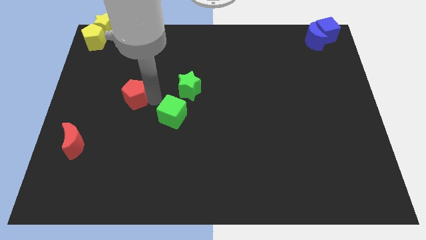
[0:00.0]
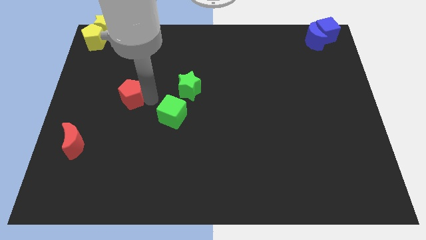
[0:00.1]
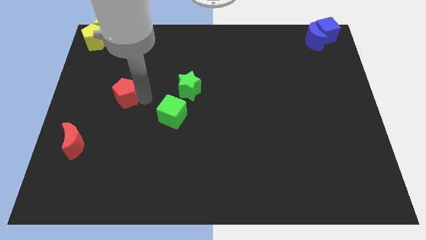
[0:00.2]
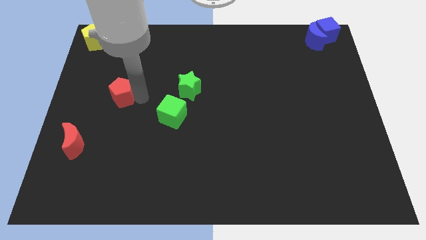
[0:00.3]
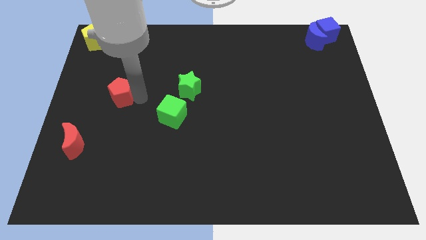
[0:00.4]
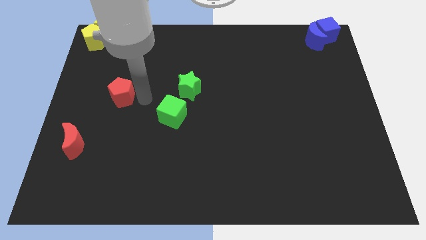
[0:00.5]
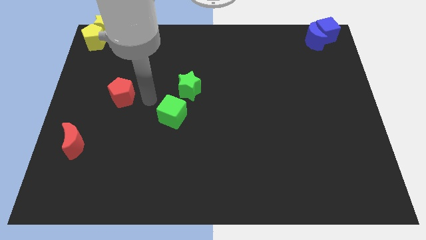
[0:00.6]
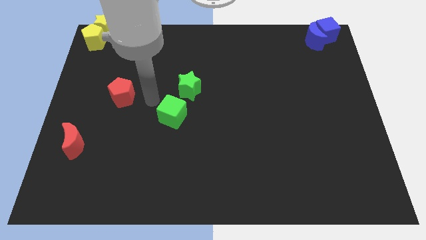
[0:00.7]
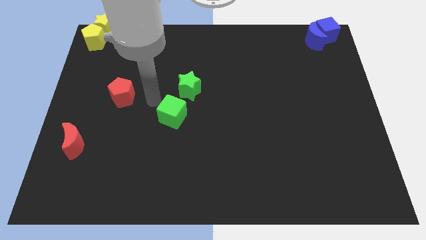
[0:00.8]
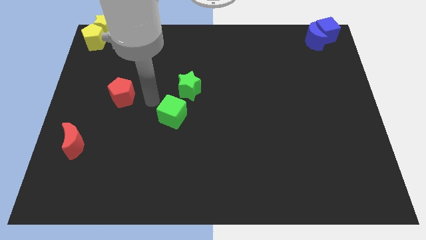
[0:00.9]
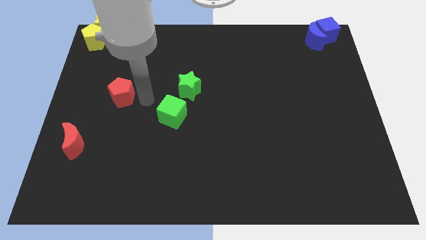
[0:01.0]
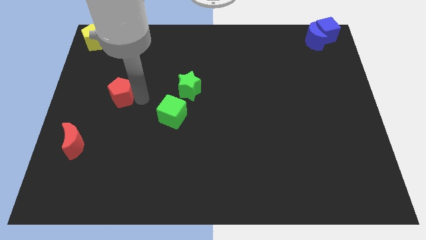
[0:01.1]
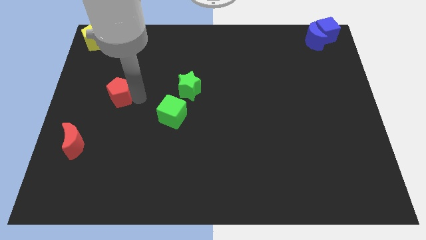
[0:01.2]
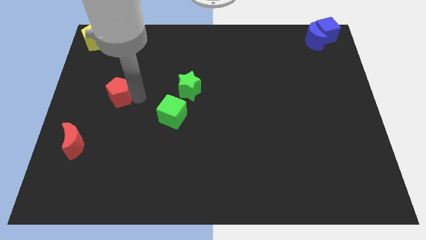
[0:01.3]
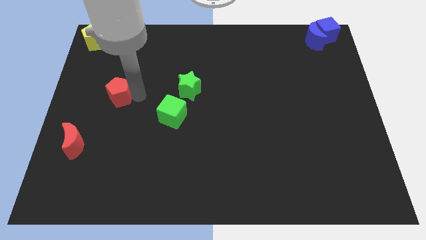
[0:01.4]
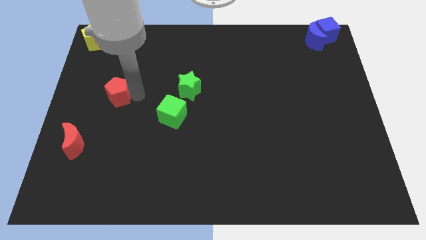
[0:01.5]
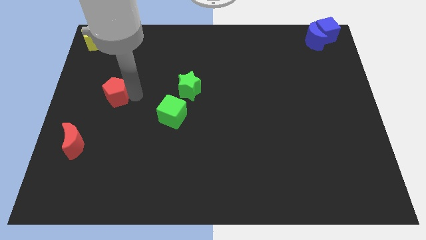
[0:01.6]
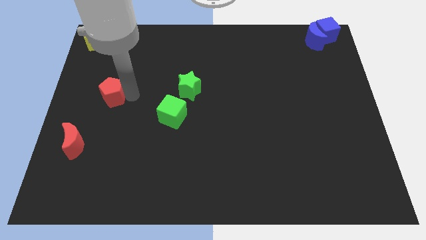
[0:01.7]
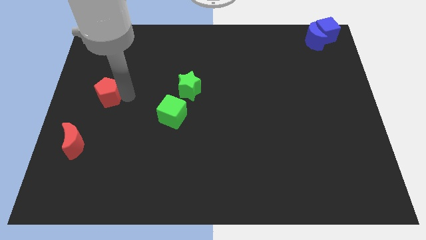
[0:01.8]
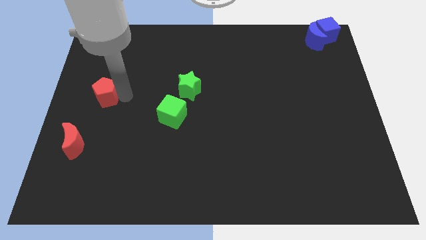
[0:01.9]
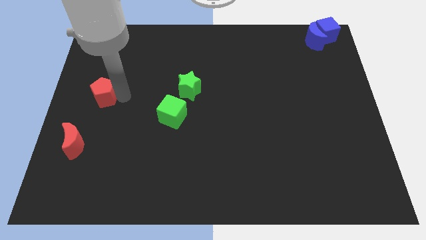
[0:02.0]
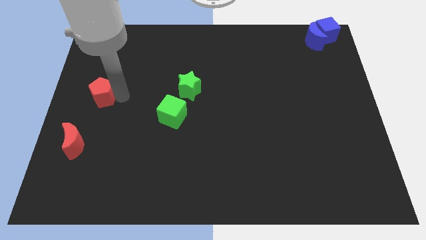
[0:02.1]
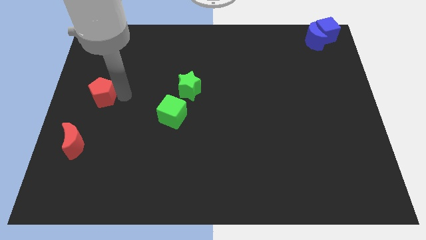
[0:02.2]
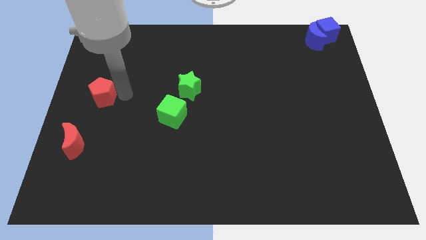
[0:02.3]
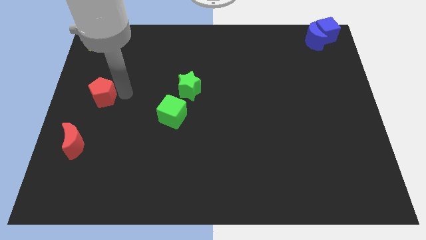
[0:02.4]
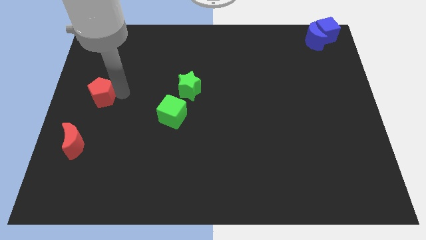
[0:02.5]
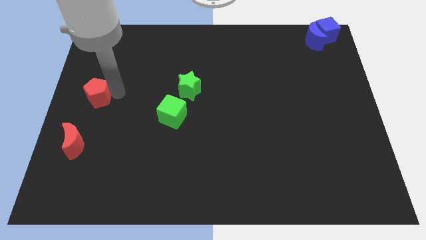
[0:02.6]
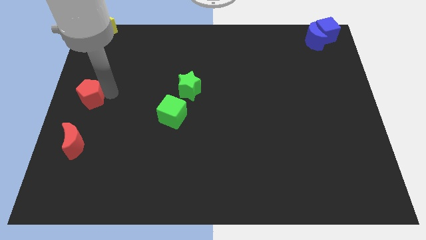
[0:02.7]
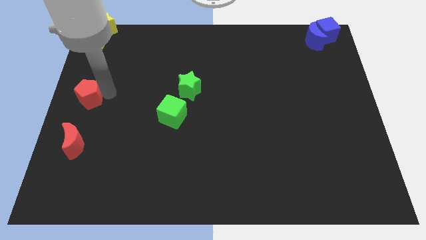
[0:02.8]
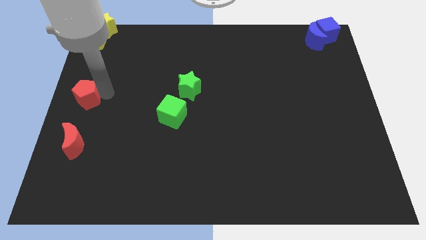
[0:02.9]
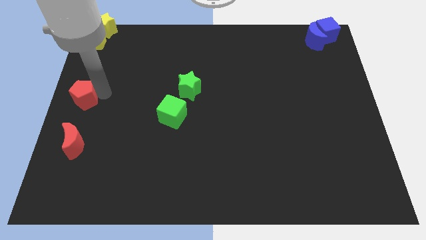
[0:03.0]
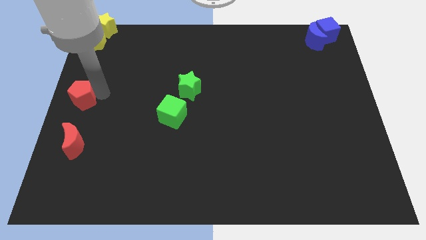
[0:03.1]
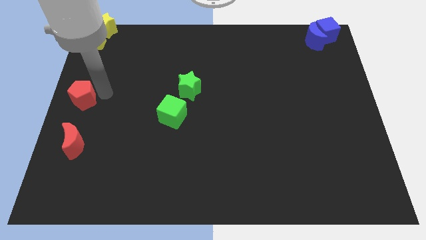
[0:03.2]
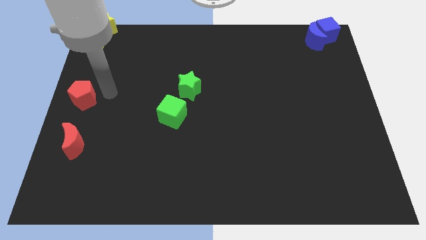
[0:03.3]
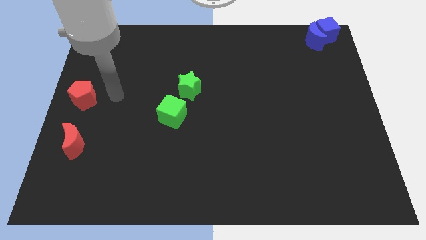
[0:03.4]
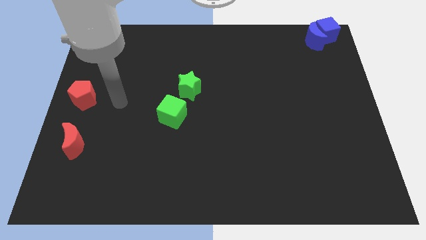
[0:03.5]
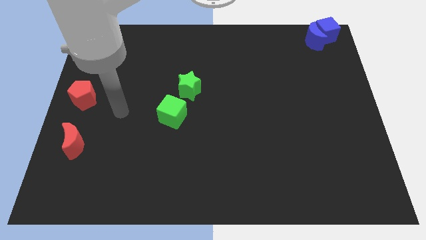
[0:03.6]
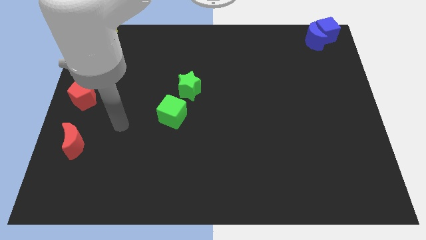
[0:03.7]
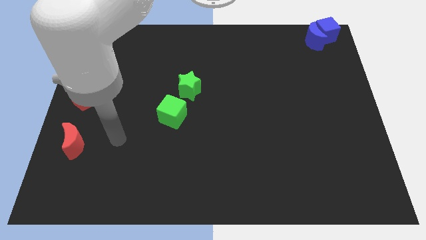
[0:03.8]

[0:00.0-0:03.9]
move the red pentagon to the left of the board

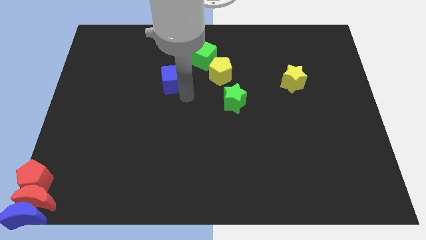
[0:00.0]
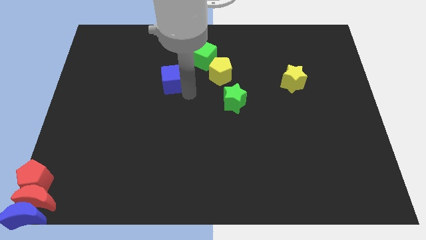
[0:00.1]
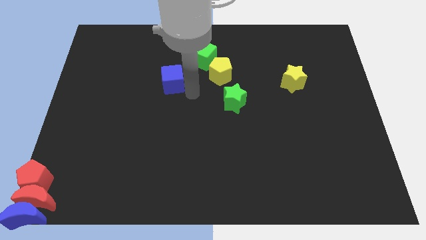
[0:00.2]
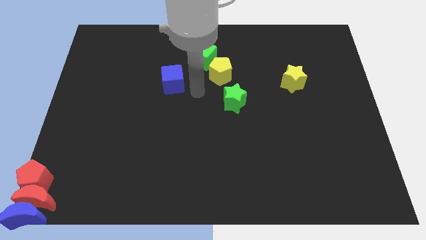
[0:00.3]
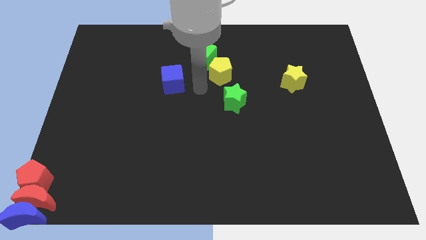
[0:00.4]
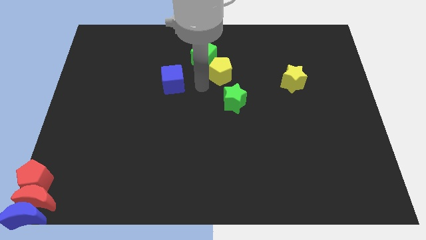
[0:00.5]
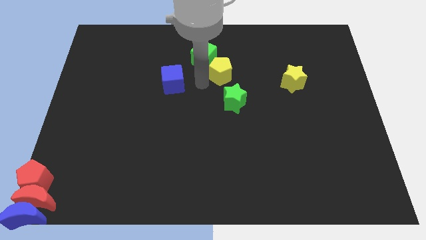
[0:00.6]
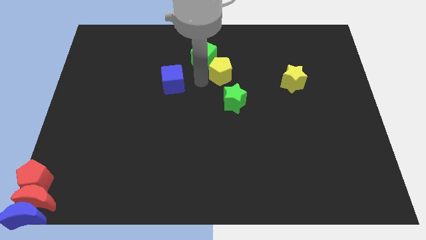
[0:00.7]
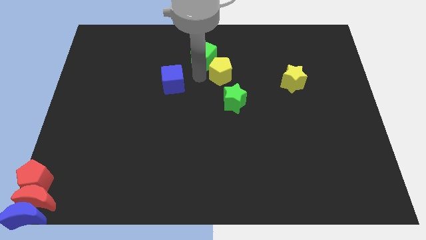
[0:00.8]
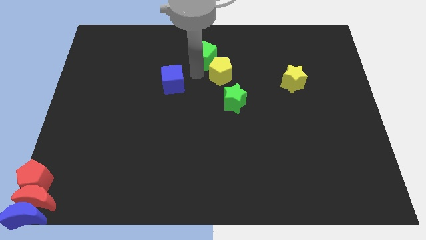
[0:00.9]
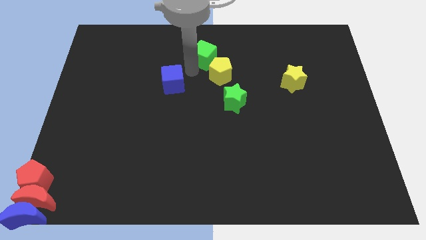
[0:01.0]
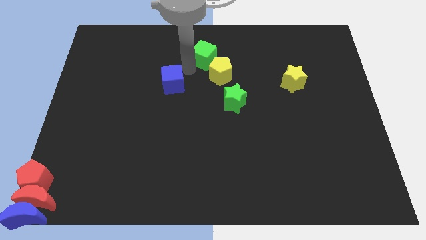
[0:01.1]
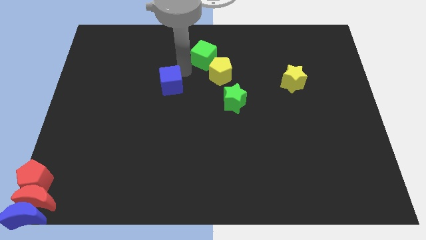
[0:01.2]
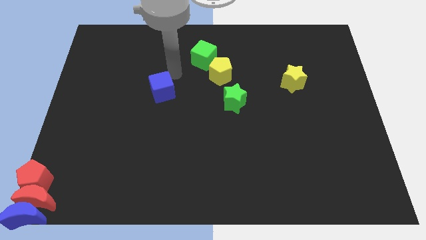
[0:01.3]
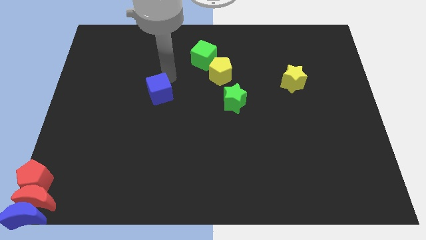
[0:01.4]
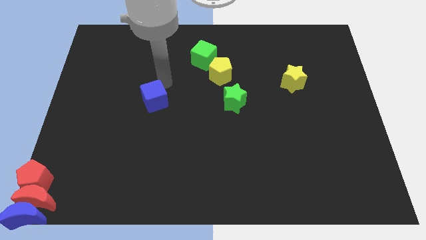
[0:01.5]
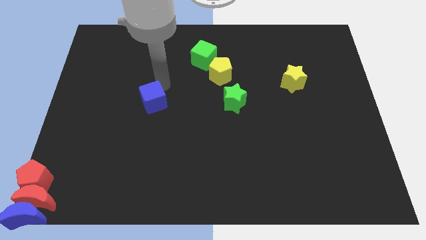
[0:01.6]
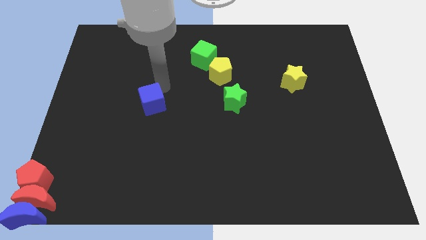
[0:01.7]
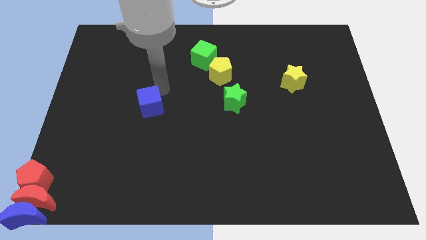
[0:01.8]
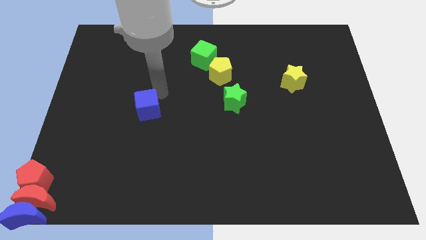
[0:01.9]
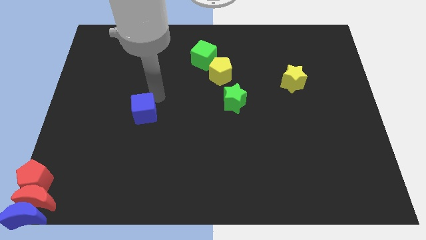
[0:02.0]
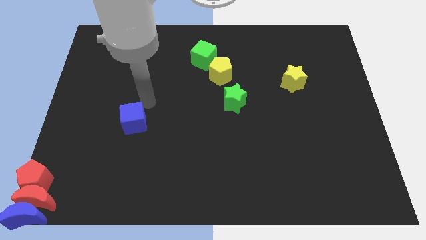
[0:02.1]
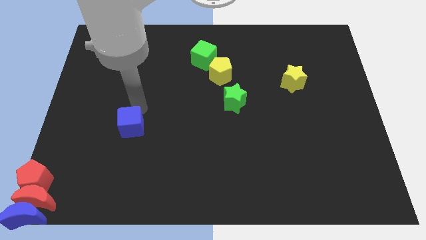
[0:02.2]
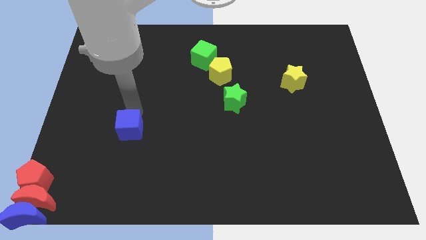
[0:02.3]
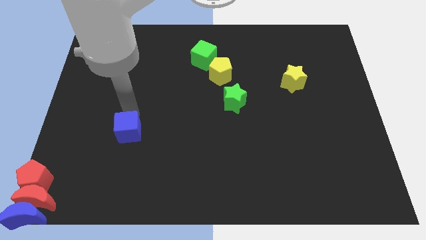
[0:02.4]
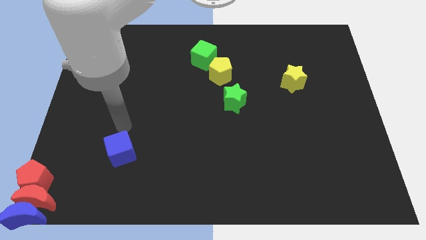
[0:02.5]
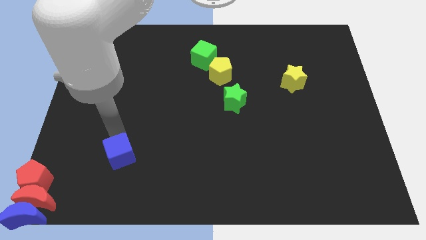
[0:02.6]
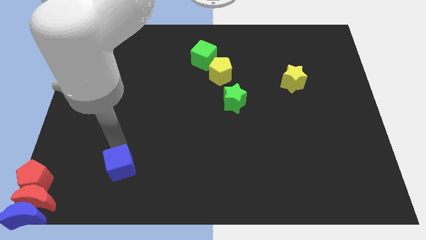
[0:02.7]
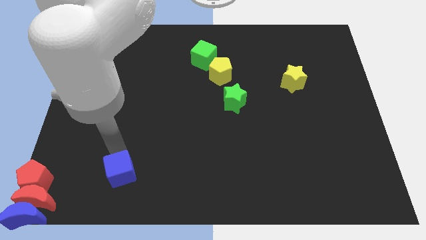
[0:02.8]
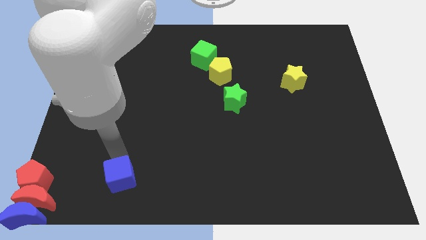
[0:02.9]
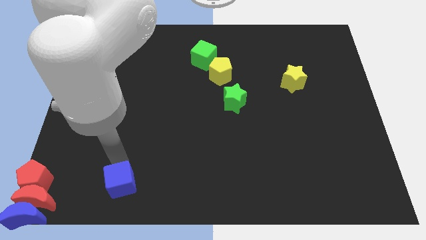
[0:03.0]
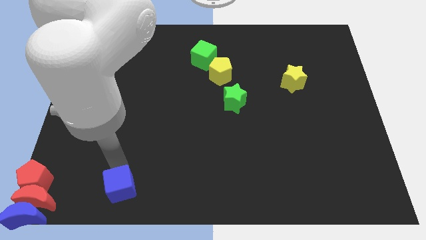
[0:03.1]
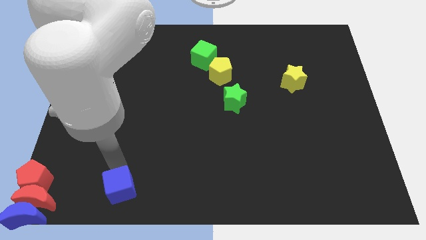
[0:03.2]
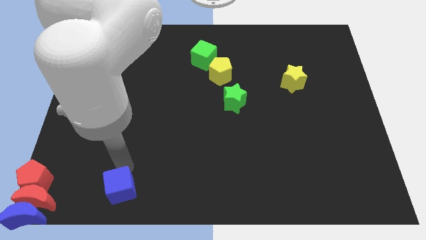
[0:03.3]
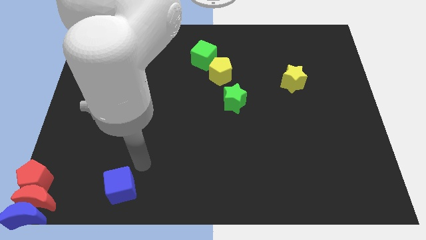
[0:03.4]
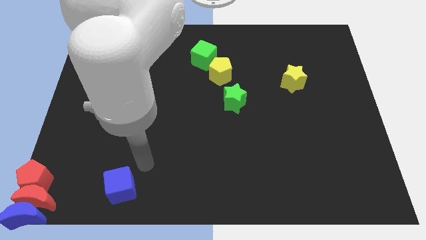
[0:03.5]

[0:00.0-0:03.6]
place the blue cube right to the red pentagon

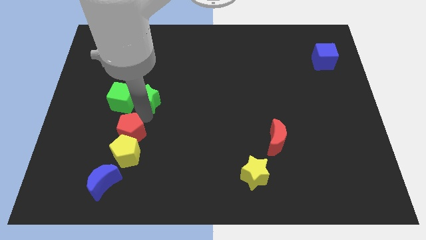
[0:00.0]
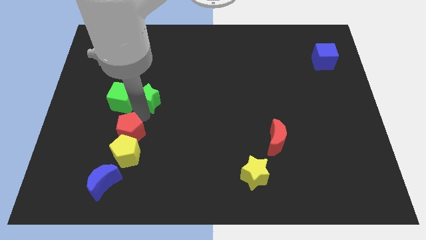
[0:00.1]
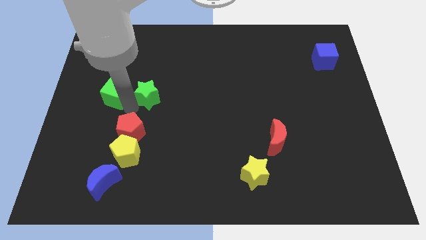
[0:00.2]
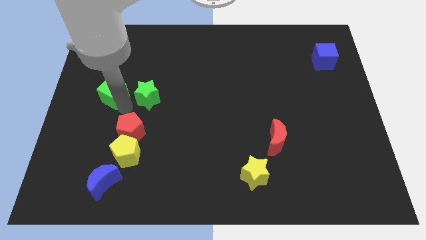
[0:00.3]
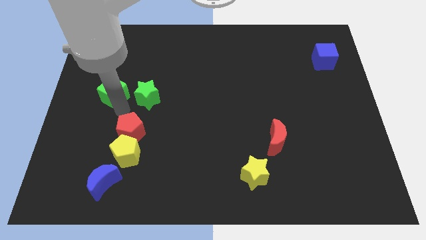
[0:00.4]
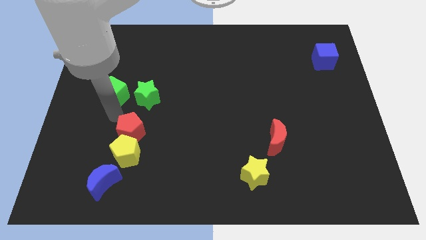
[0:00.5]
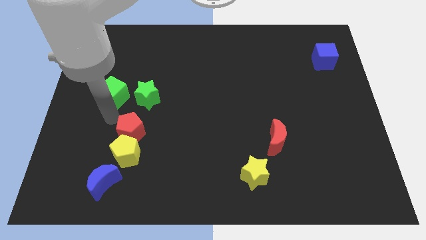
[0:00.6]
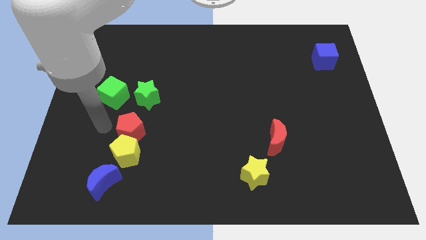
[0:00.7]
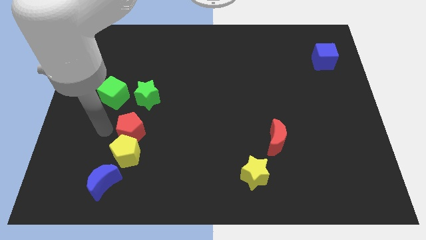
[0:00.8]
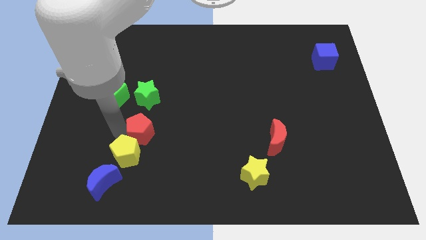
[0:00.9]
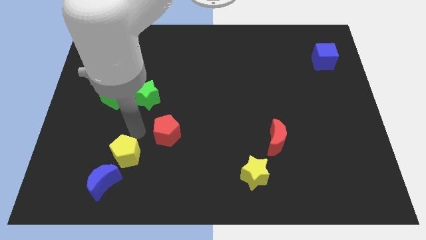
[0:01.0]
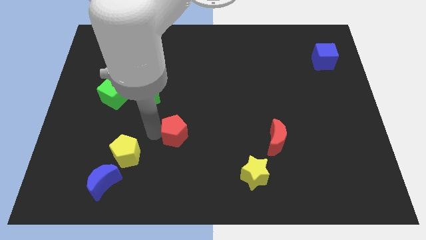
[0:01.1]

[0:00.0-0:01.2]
push the red pentagon away from the yellow pentagon

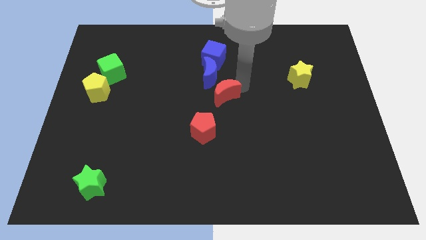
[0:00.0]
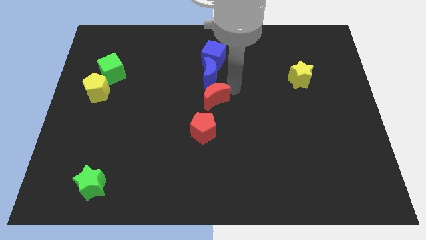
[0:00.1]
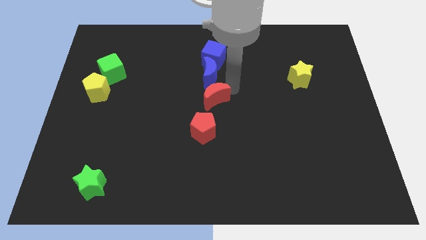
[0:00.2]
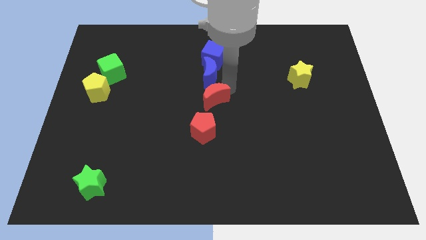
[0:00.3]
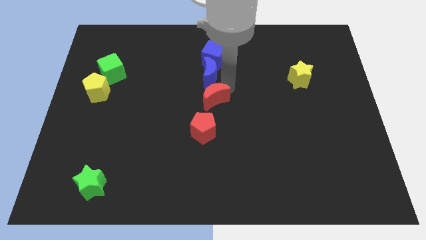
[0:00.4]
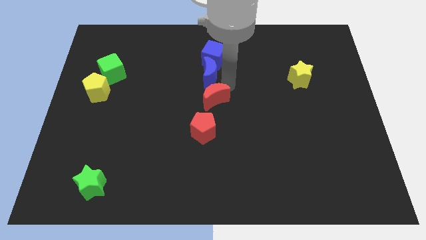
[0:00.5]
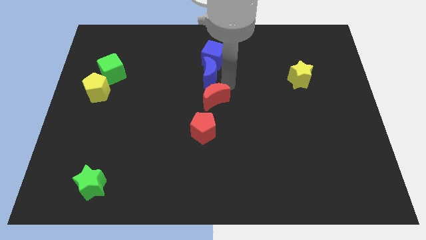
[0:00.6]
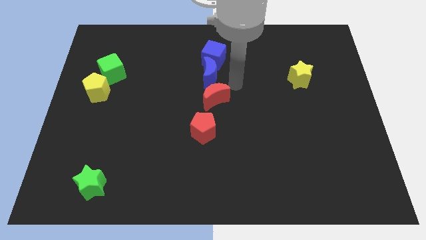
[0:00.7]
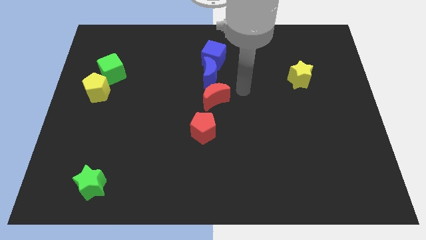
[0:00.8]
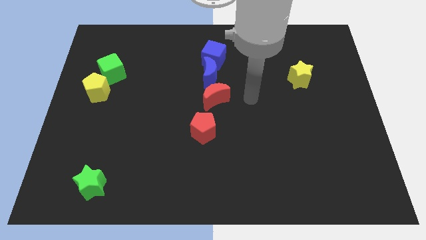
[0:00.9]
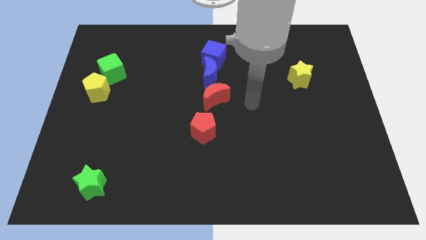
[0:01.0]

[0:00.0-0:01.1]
move the red moon slightly to the left
